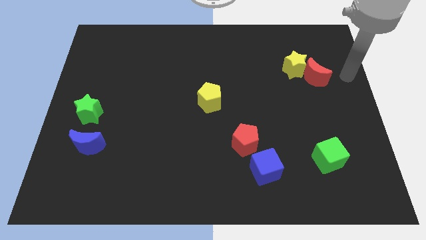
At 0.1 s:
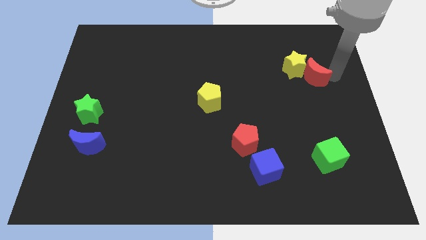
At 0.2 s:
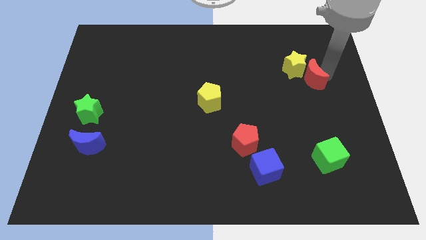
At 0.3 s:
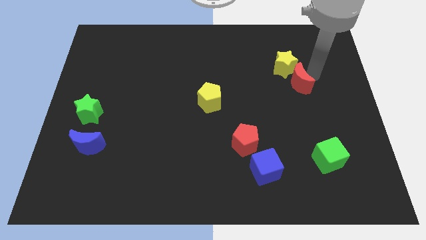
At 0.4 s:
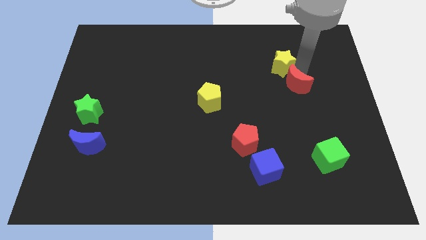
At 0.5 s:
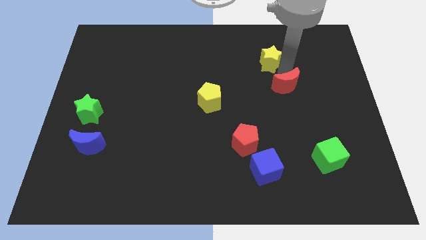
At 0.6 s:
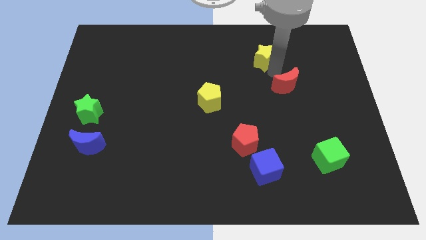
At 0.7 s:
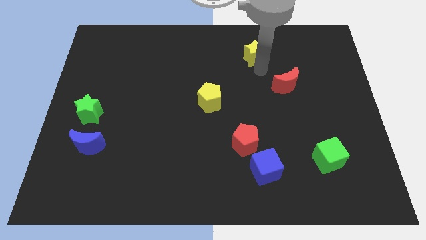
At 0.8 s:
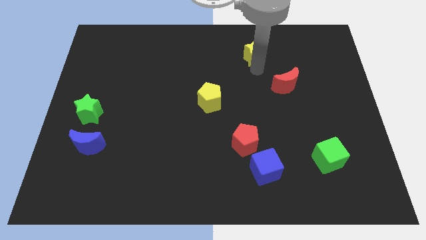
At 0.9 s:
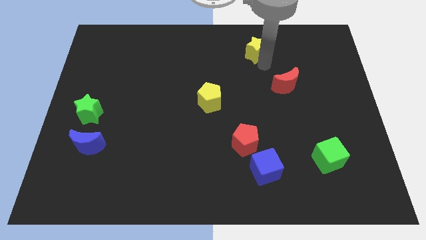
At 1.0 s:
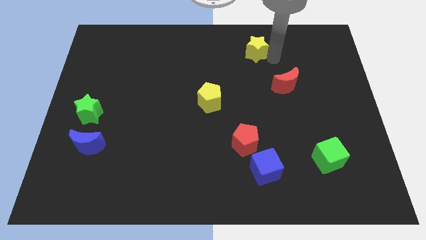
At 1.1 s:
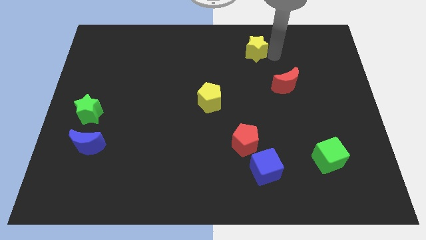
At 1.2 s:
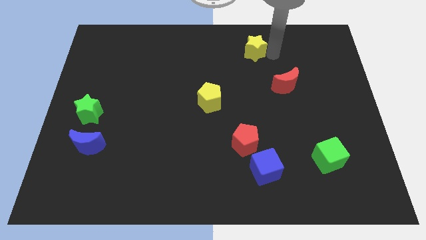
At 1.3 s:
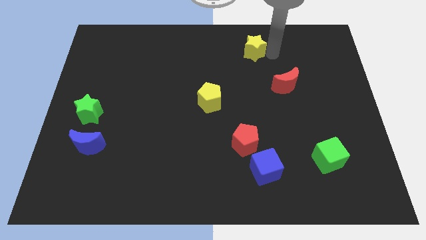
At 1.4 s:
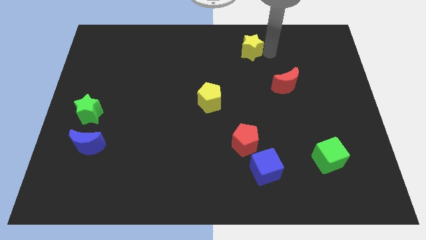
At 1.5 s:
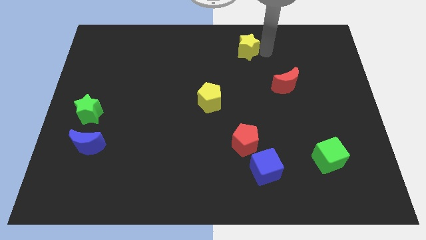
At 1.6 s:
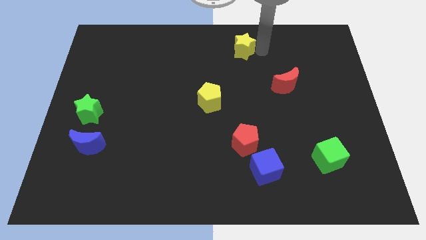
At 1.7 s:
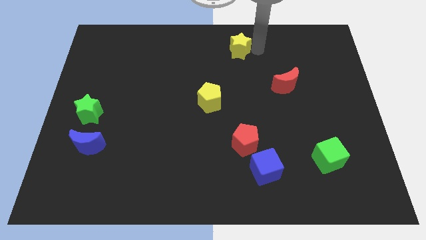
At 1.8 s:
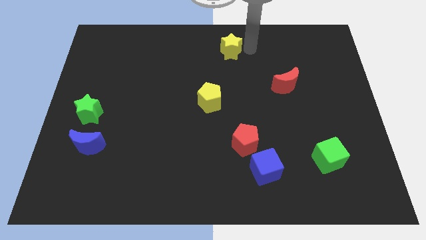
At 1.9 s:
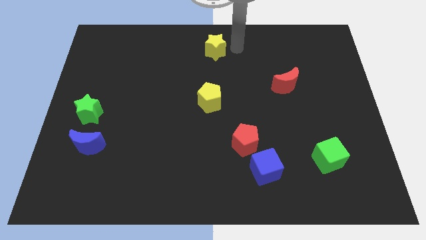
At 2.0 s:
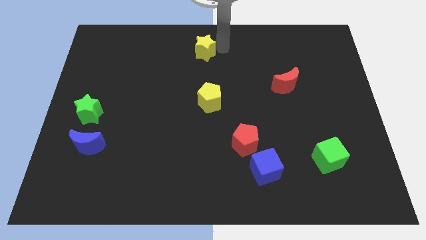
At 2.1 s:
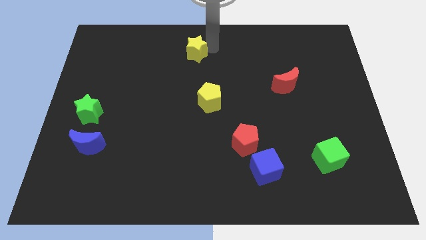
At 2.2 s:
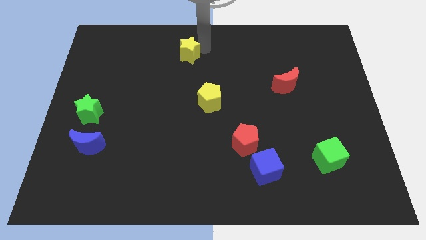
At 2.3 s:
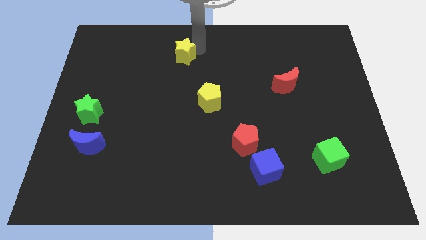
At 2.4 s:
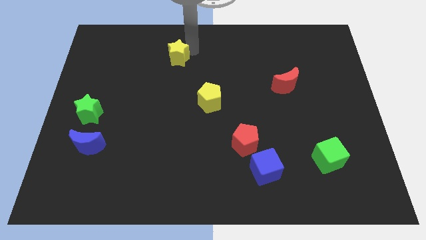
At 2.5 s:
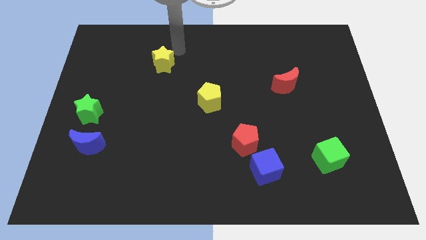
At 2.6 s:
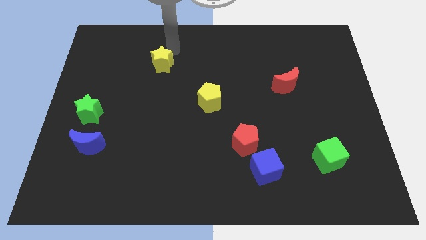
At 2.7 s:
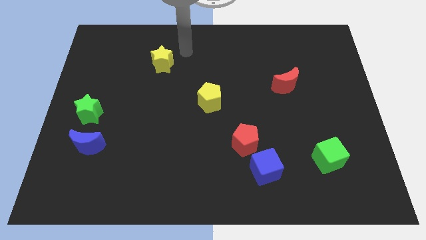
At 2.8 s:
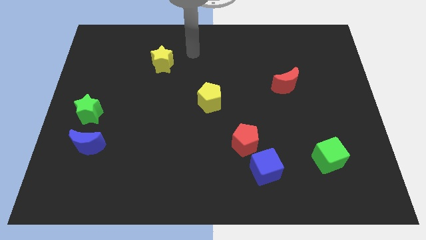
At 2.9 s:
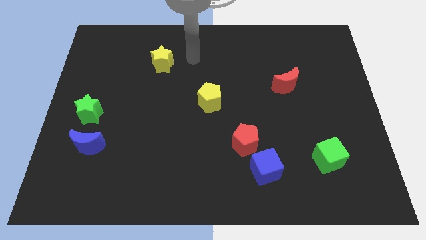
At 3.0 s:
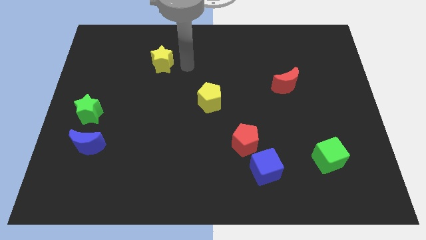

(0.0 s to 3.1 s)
move the yellow star to the top left of the yellow pentagon

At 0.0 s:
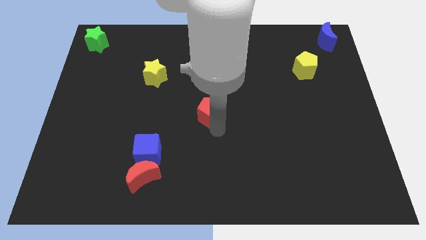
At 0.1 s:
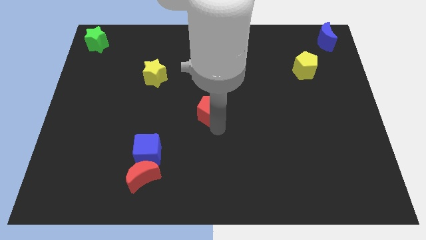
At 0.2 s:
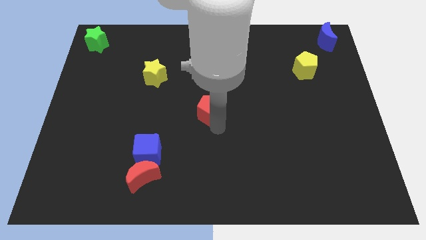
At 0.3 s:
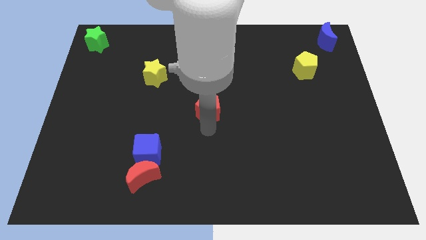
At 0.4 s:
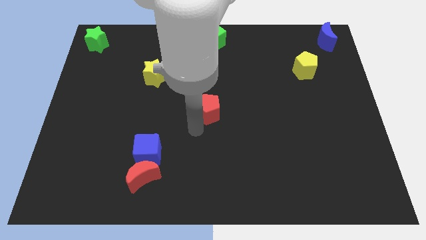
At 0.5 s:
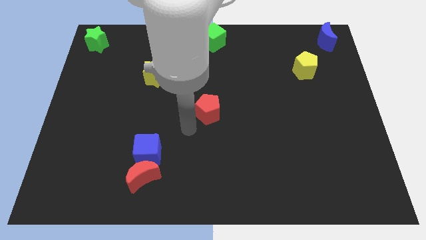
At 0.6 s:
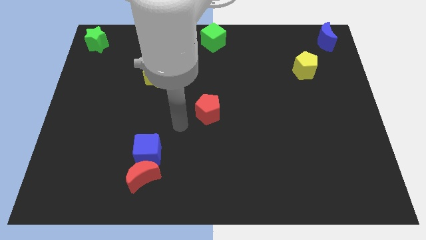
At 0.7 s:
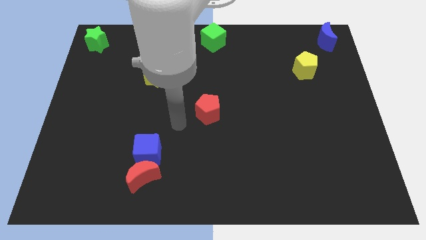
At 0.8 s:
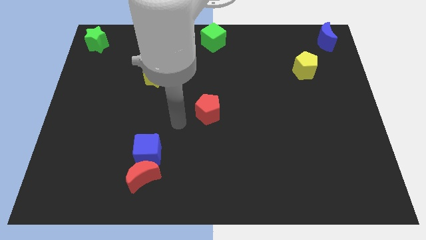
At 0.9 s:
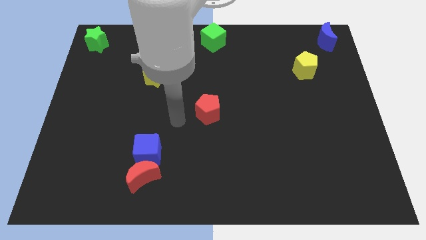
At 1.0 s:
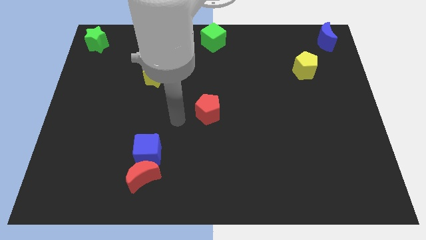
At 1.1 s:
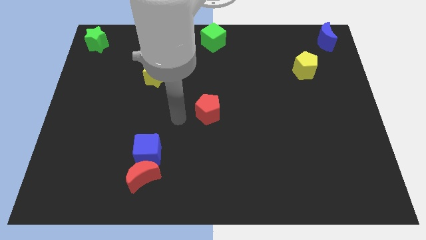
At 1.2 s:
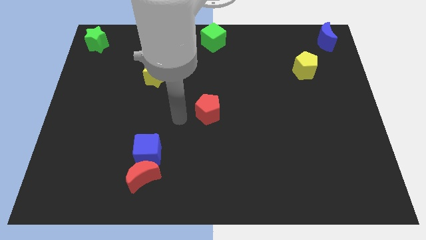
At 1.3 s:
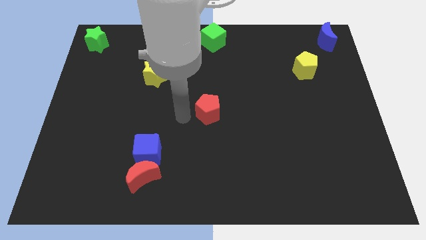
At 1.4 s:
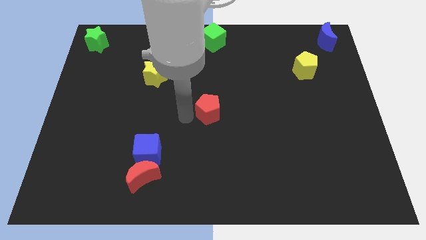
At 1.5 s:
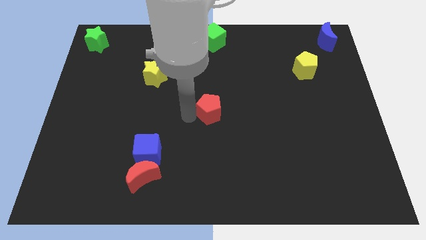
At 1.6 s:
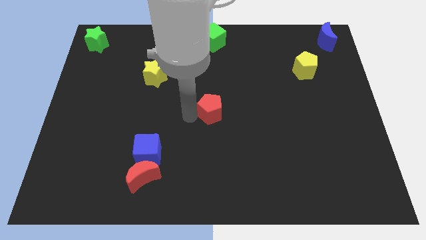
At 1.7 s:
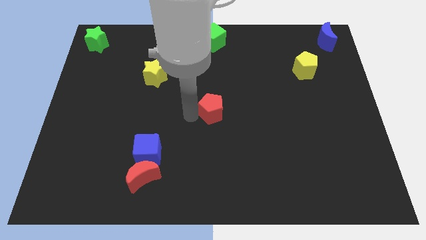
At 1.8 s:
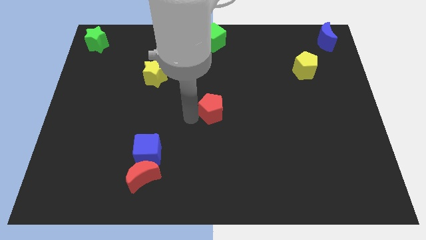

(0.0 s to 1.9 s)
put the red pentagon vertically below the green cube

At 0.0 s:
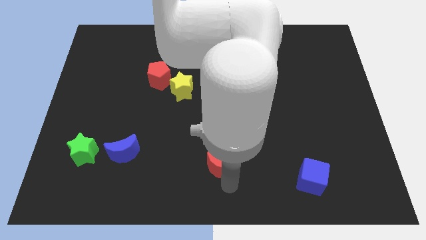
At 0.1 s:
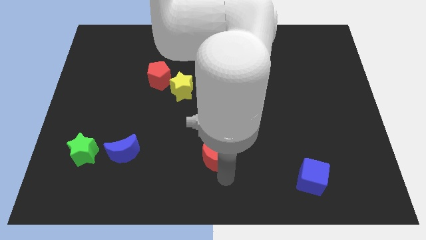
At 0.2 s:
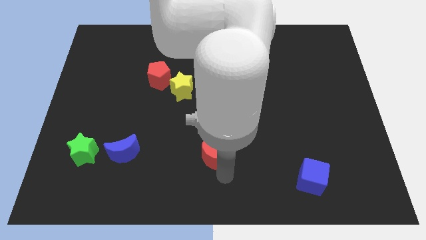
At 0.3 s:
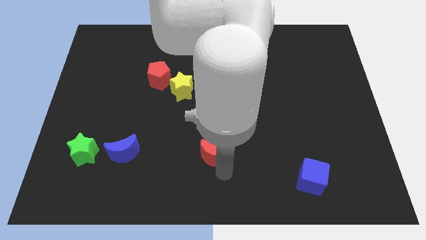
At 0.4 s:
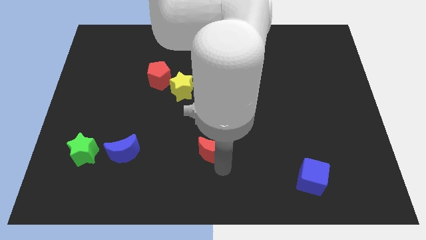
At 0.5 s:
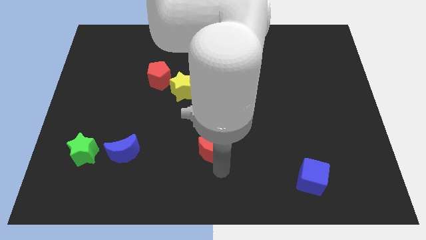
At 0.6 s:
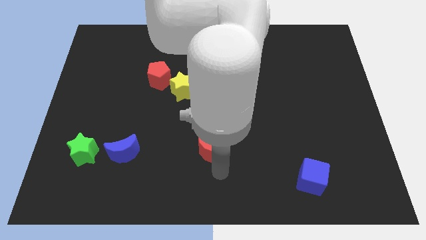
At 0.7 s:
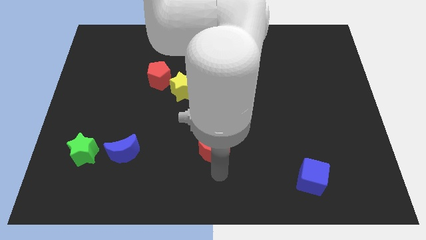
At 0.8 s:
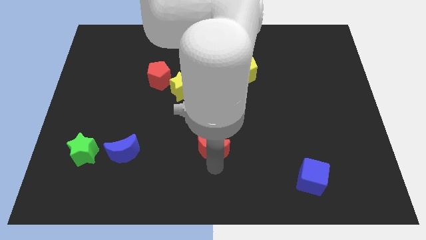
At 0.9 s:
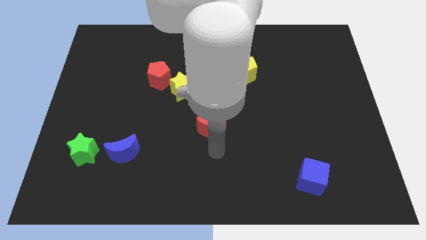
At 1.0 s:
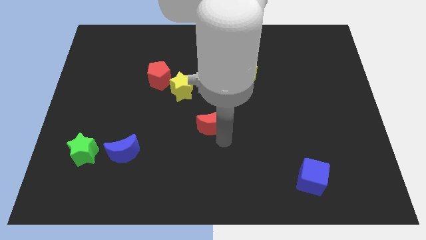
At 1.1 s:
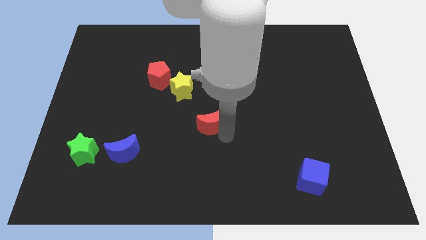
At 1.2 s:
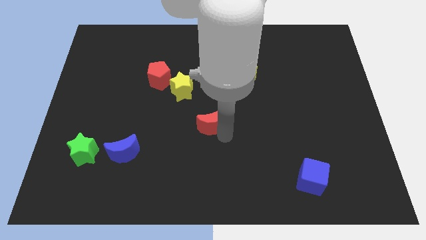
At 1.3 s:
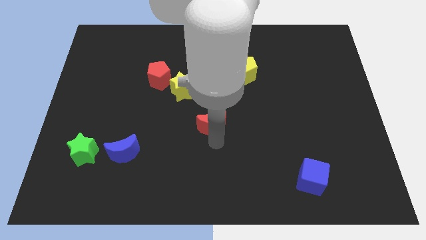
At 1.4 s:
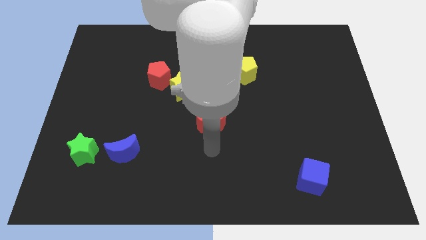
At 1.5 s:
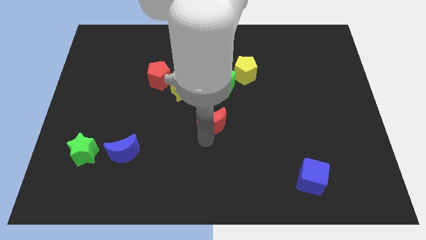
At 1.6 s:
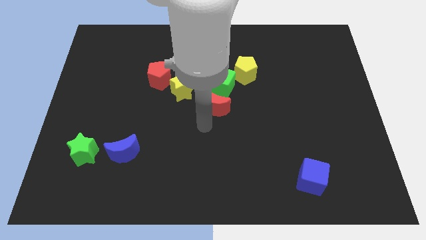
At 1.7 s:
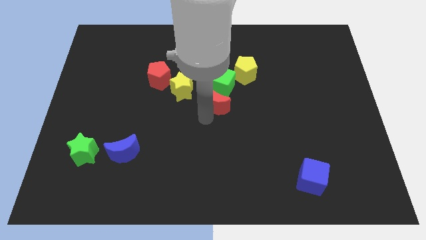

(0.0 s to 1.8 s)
push the red moon to the center of the board

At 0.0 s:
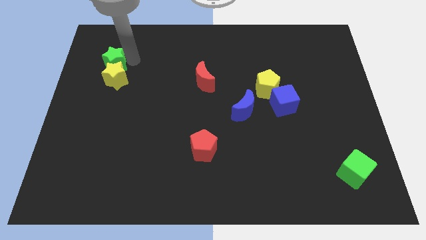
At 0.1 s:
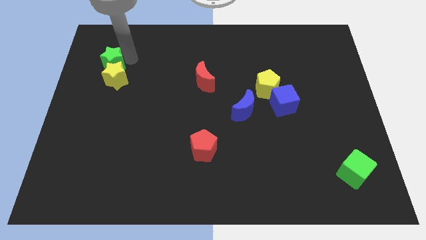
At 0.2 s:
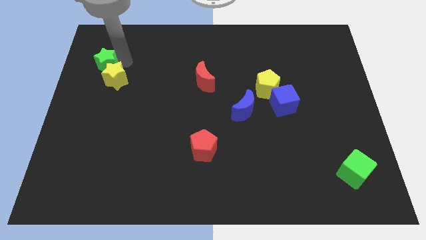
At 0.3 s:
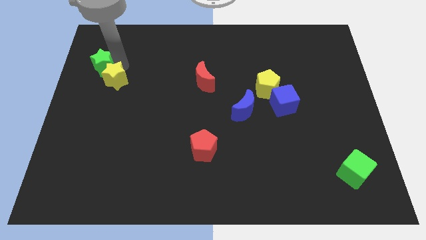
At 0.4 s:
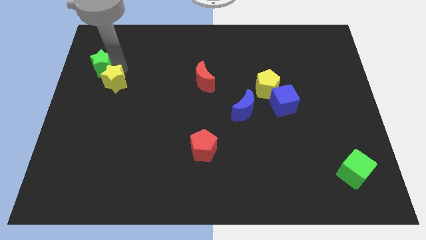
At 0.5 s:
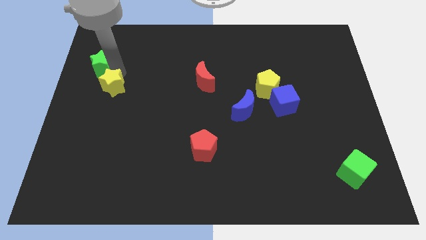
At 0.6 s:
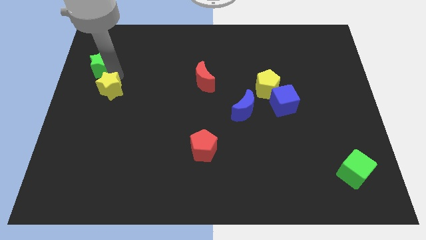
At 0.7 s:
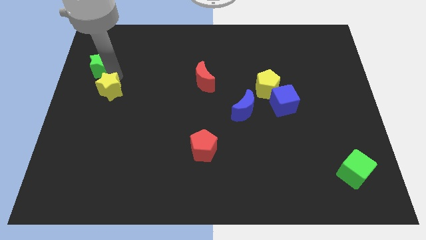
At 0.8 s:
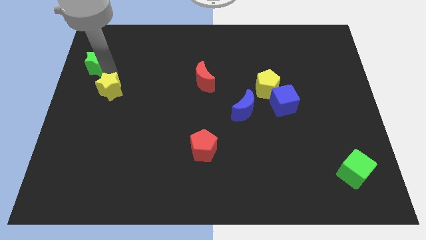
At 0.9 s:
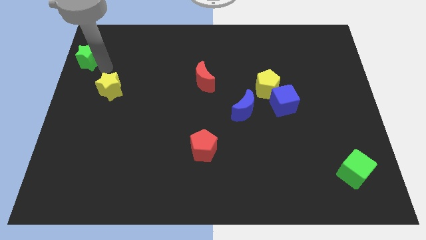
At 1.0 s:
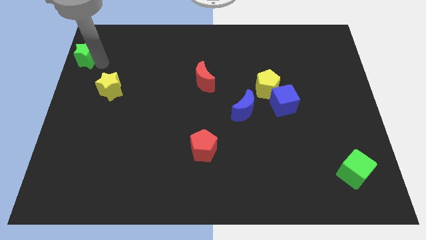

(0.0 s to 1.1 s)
separate green and yellow stars

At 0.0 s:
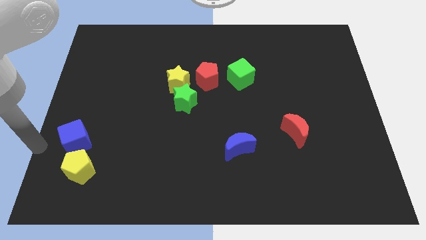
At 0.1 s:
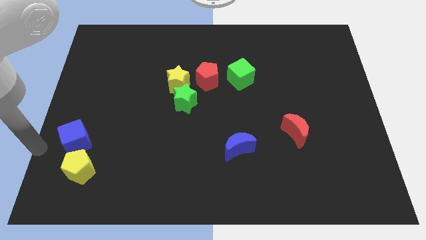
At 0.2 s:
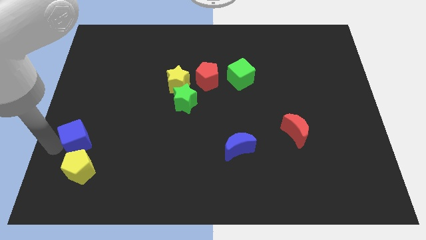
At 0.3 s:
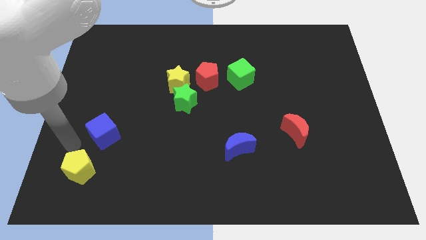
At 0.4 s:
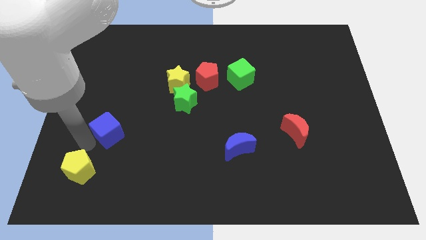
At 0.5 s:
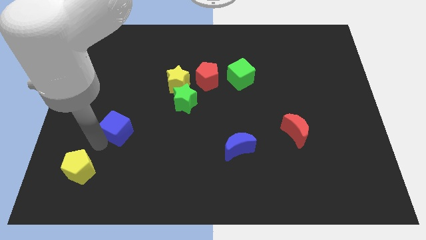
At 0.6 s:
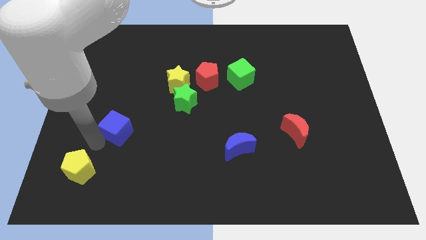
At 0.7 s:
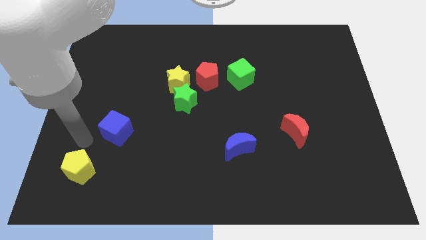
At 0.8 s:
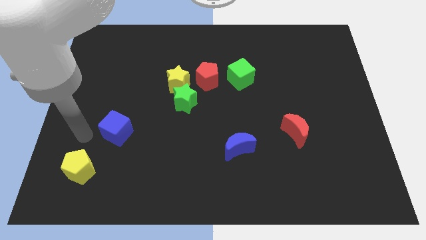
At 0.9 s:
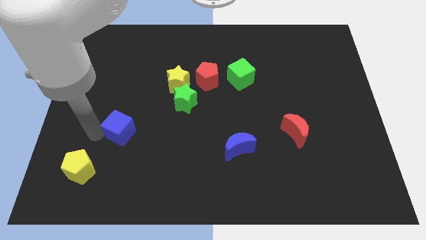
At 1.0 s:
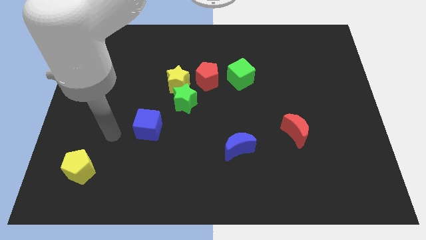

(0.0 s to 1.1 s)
push the blue cube between yellow pentagon and green star
